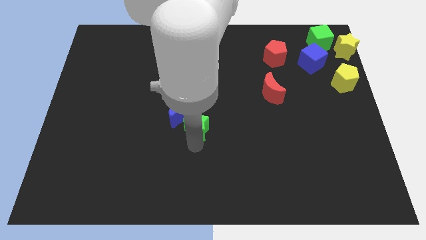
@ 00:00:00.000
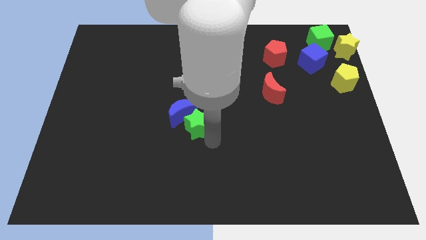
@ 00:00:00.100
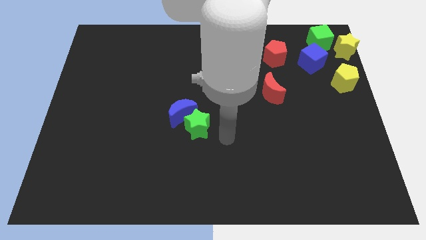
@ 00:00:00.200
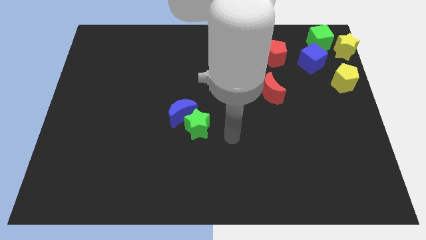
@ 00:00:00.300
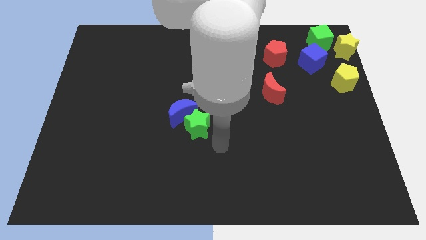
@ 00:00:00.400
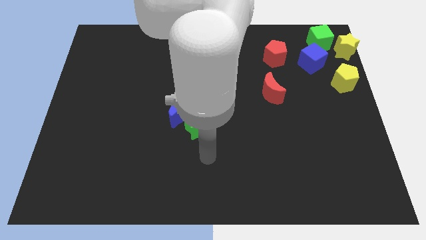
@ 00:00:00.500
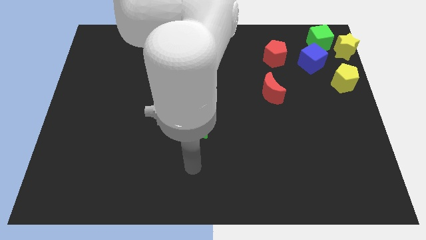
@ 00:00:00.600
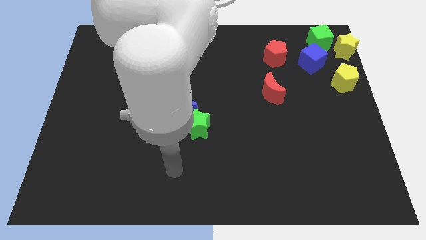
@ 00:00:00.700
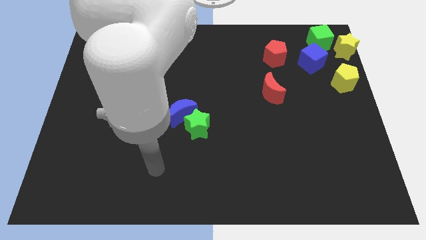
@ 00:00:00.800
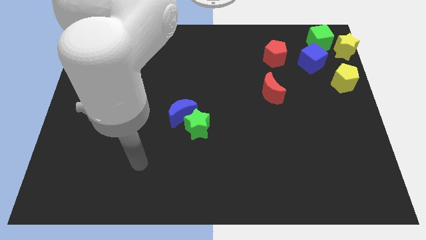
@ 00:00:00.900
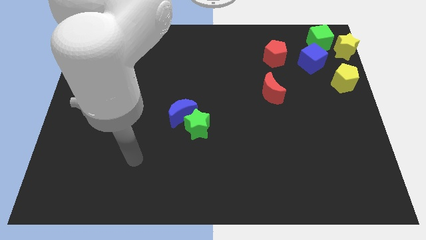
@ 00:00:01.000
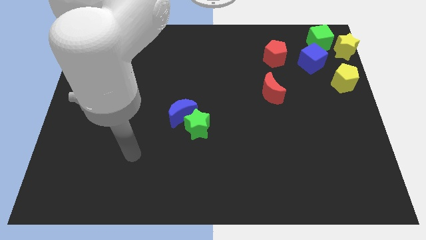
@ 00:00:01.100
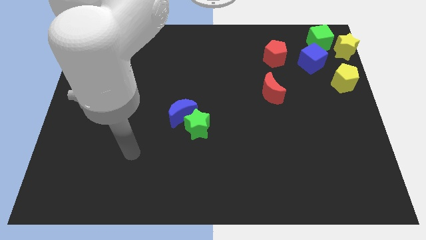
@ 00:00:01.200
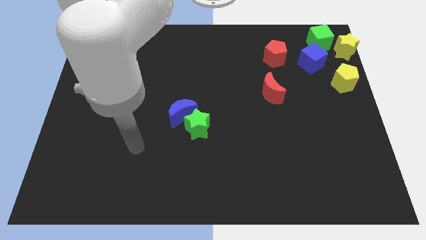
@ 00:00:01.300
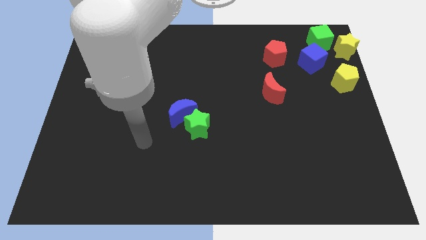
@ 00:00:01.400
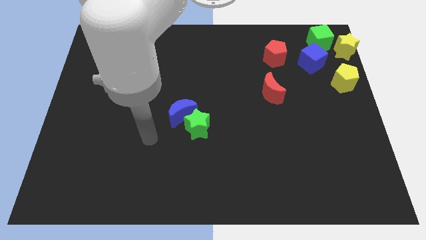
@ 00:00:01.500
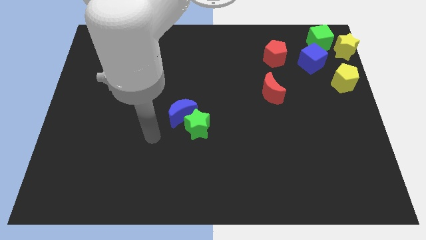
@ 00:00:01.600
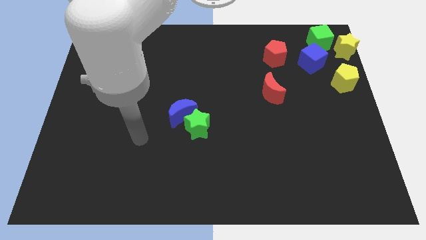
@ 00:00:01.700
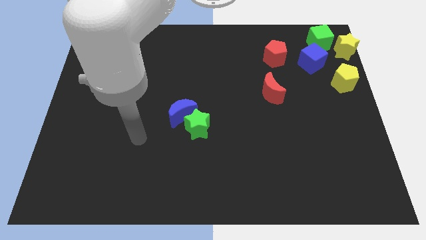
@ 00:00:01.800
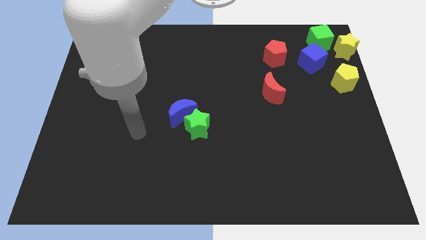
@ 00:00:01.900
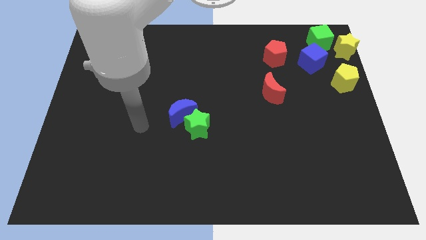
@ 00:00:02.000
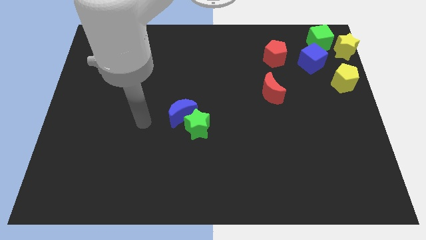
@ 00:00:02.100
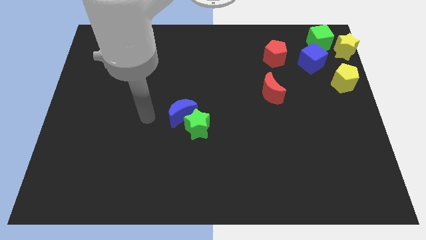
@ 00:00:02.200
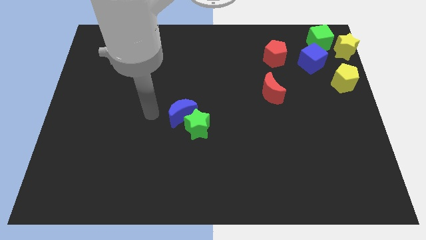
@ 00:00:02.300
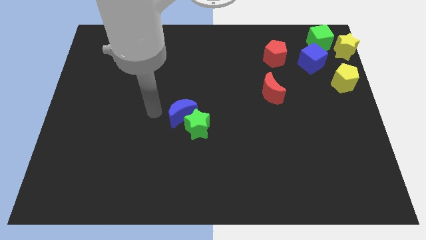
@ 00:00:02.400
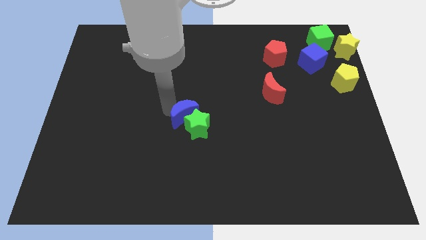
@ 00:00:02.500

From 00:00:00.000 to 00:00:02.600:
move your arm to the left of the blue moon

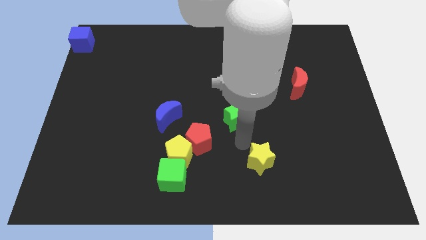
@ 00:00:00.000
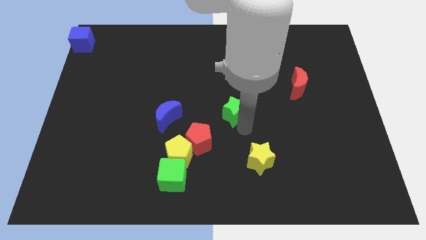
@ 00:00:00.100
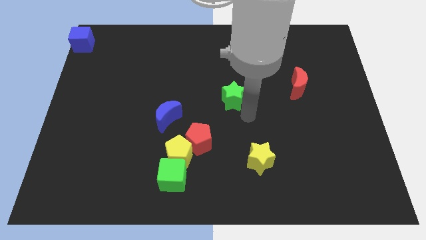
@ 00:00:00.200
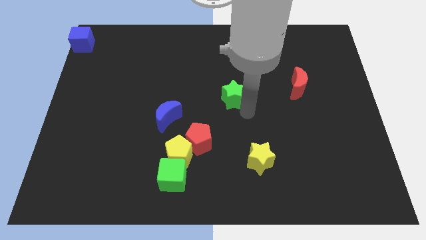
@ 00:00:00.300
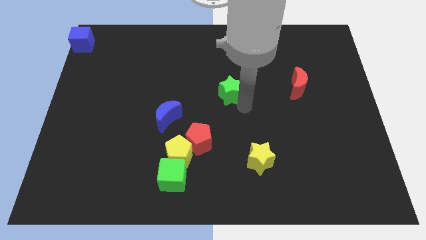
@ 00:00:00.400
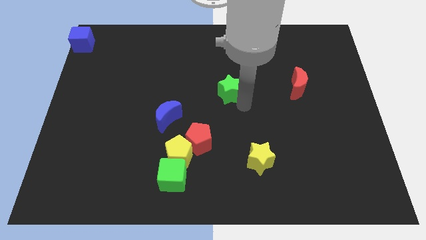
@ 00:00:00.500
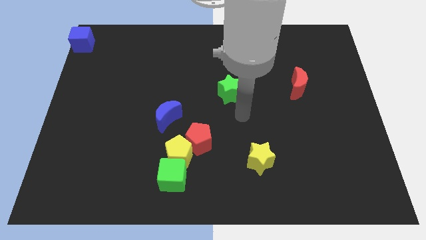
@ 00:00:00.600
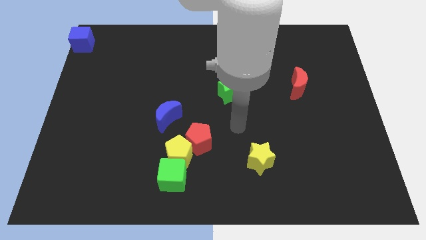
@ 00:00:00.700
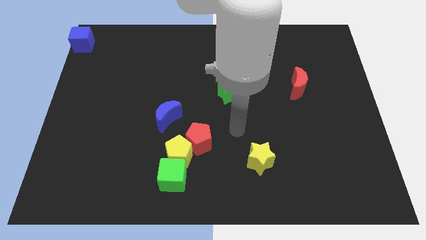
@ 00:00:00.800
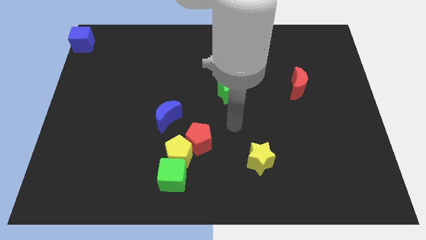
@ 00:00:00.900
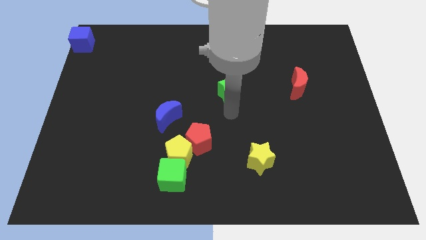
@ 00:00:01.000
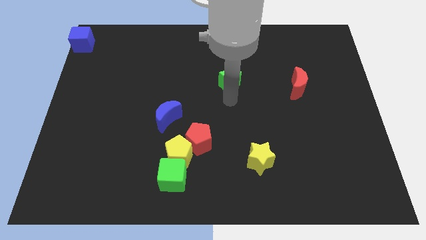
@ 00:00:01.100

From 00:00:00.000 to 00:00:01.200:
place the green star left to the red moon

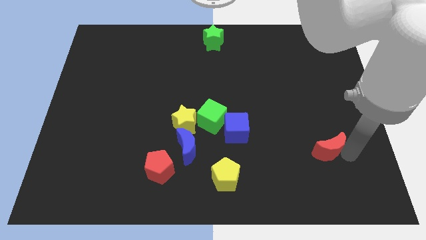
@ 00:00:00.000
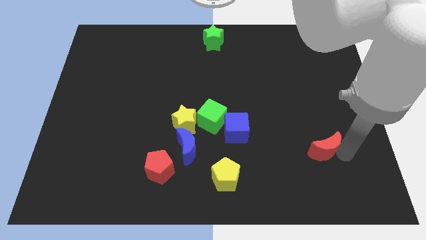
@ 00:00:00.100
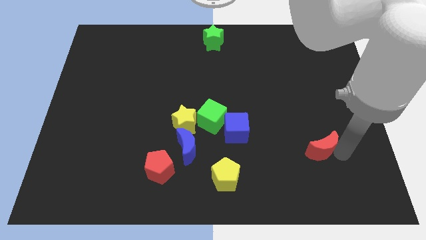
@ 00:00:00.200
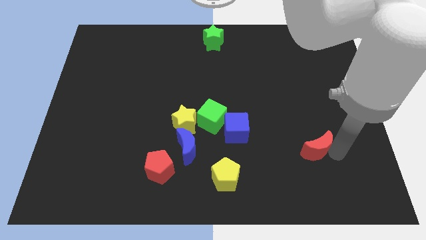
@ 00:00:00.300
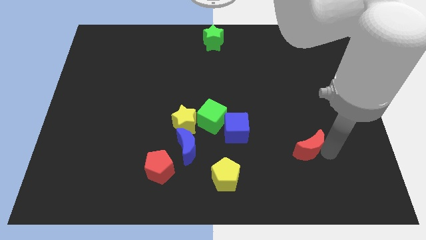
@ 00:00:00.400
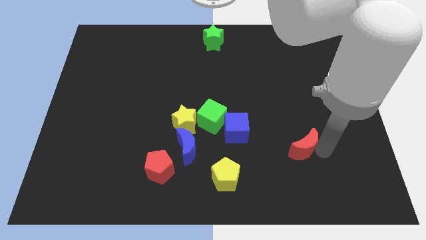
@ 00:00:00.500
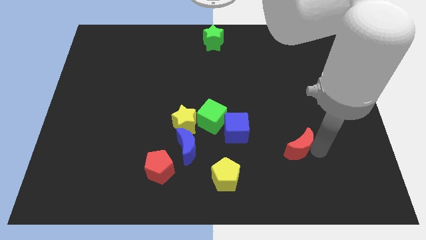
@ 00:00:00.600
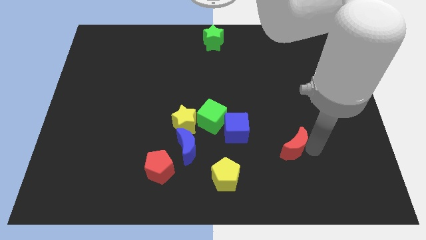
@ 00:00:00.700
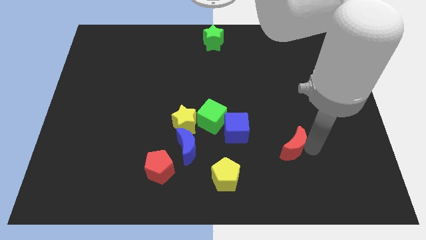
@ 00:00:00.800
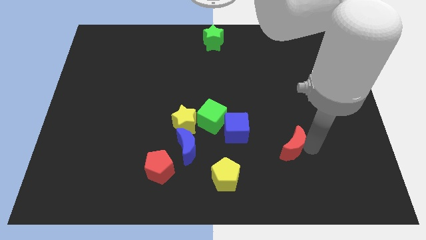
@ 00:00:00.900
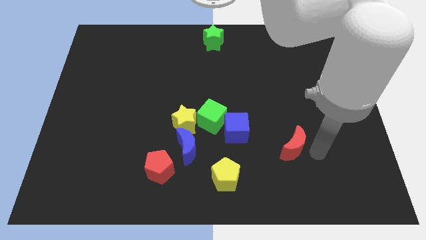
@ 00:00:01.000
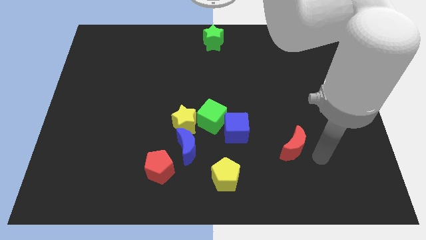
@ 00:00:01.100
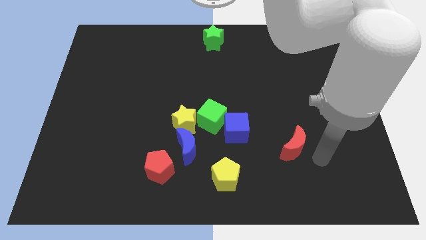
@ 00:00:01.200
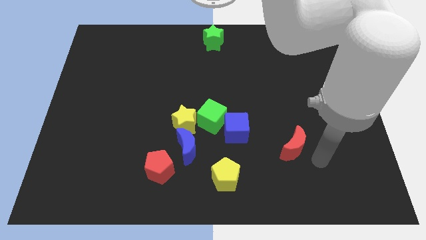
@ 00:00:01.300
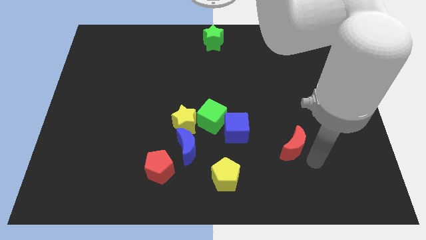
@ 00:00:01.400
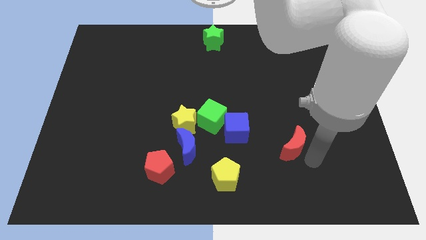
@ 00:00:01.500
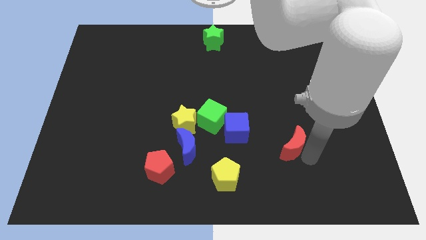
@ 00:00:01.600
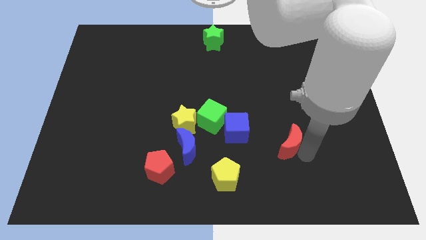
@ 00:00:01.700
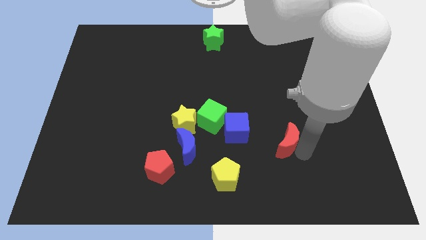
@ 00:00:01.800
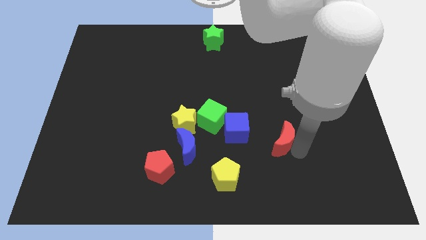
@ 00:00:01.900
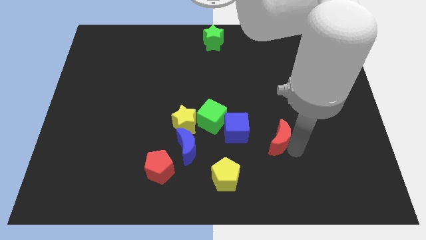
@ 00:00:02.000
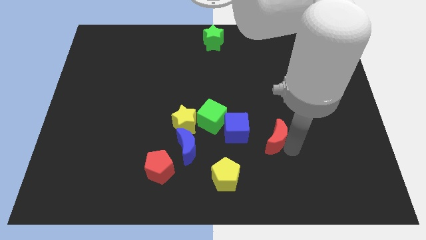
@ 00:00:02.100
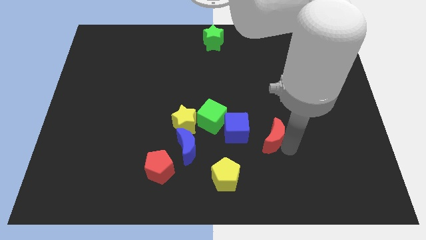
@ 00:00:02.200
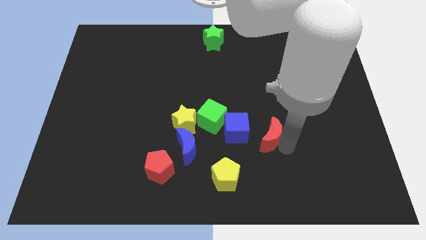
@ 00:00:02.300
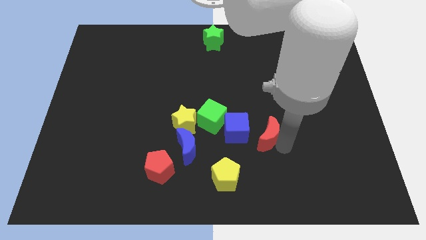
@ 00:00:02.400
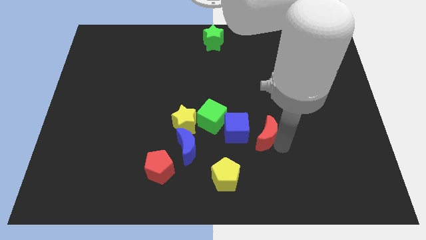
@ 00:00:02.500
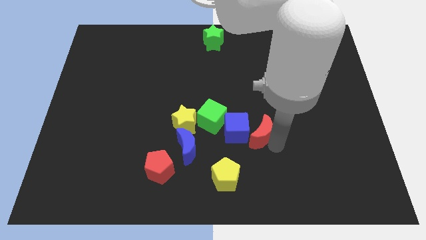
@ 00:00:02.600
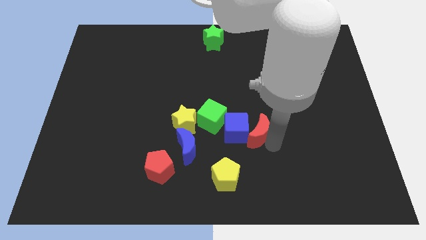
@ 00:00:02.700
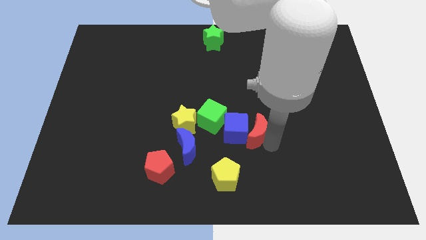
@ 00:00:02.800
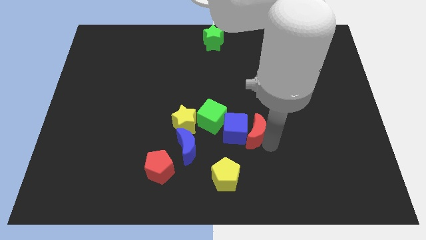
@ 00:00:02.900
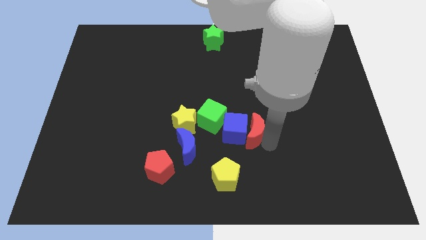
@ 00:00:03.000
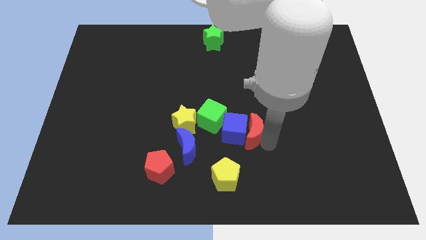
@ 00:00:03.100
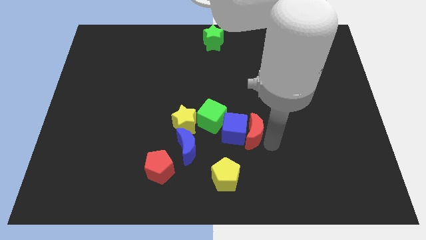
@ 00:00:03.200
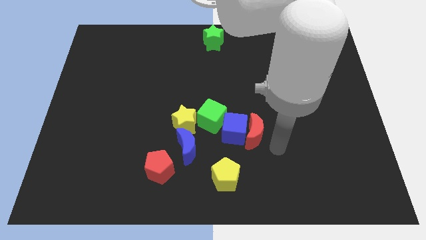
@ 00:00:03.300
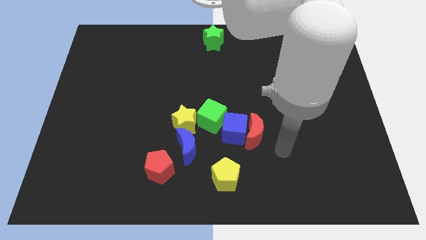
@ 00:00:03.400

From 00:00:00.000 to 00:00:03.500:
push the red moon into blue cube

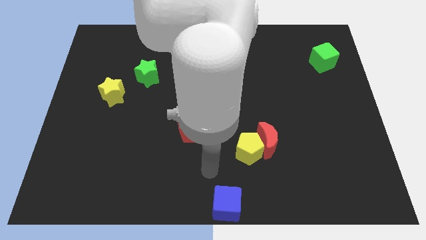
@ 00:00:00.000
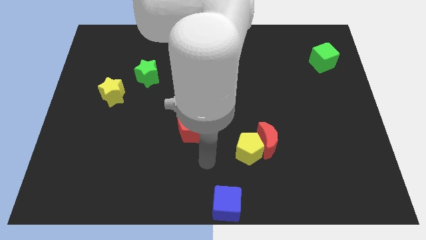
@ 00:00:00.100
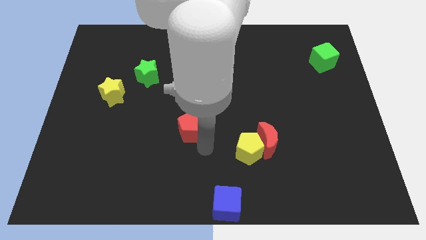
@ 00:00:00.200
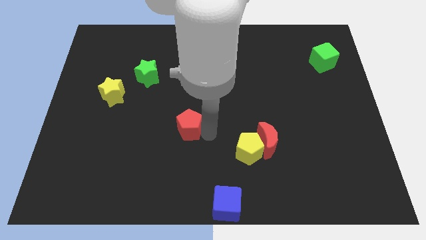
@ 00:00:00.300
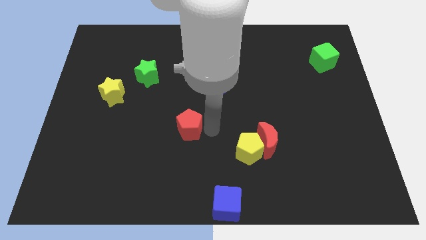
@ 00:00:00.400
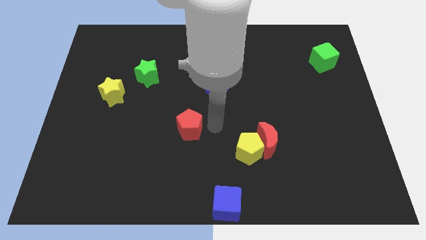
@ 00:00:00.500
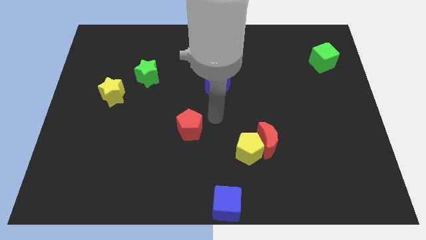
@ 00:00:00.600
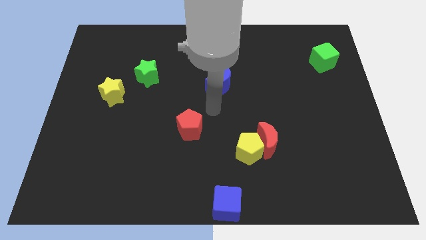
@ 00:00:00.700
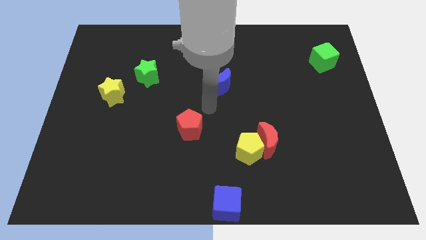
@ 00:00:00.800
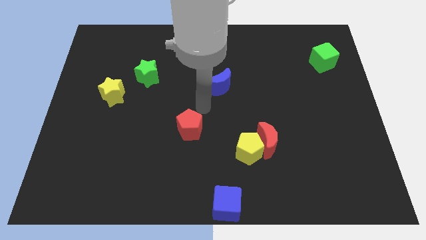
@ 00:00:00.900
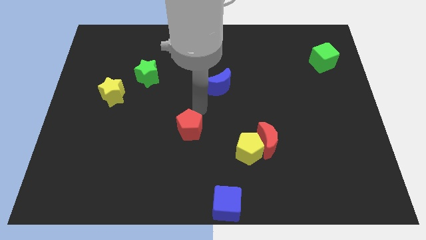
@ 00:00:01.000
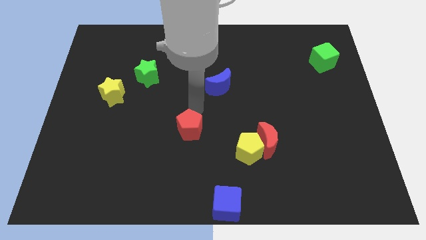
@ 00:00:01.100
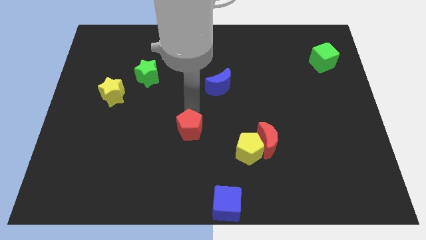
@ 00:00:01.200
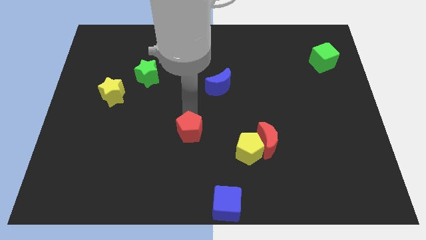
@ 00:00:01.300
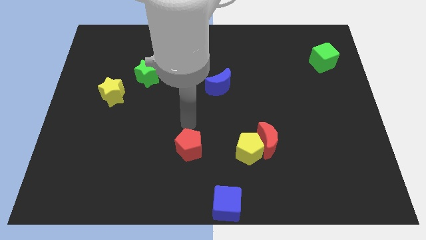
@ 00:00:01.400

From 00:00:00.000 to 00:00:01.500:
touch the red pentagon

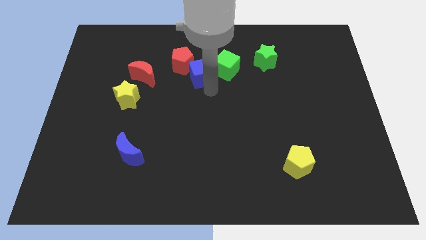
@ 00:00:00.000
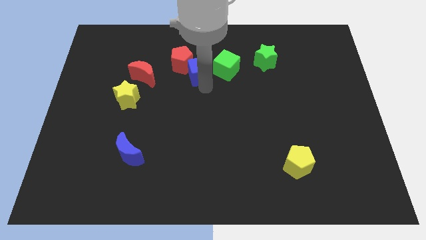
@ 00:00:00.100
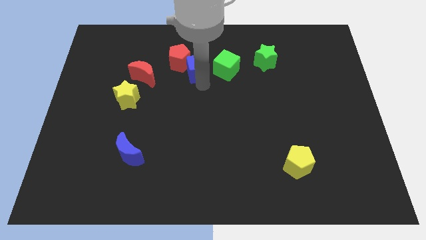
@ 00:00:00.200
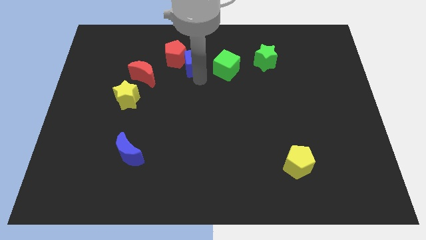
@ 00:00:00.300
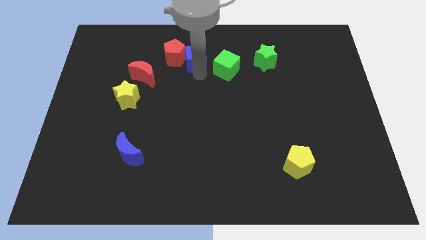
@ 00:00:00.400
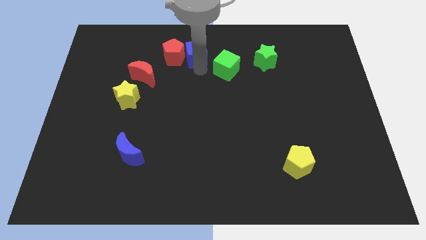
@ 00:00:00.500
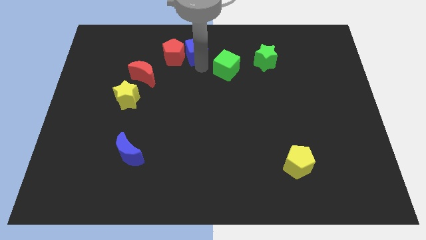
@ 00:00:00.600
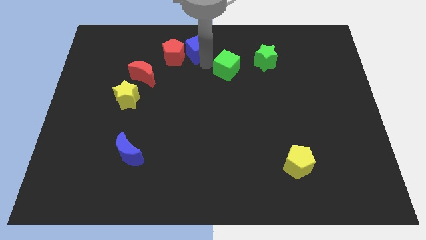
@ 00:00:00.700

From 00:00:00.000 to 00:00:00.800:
move the blue cube to the right of the red pentagon
